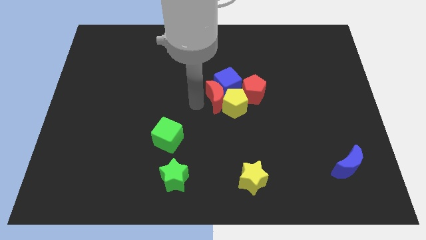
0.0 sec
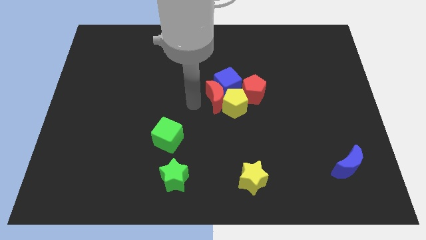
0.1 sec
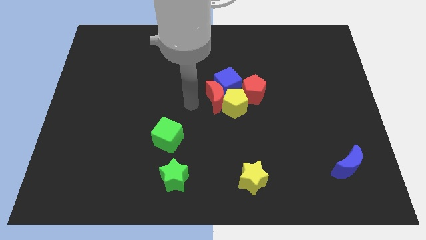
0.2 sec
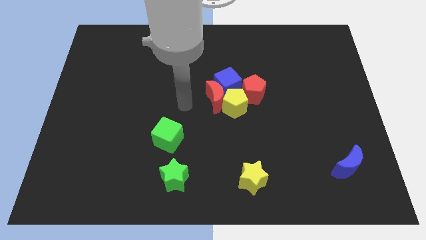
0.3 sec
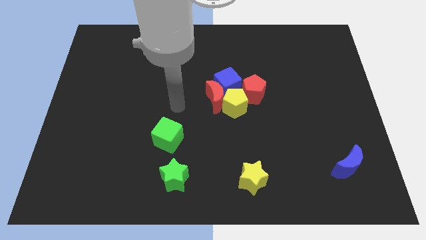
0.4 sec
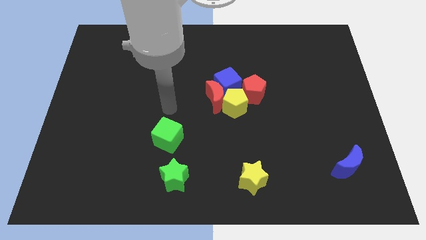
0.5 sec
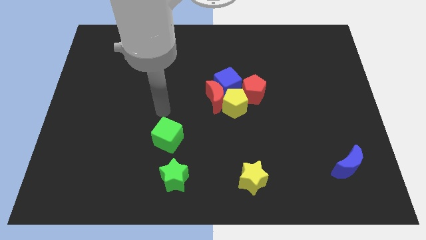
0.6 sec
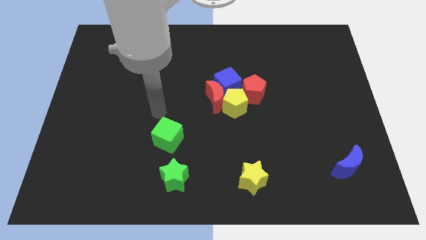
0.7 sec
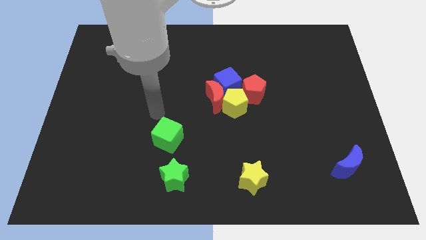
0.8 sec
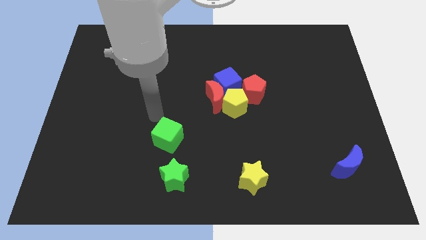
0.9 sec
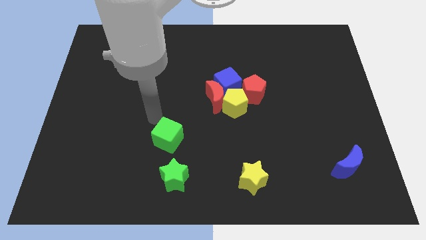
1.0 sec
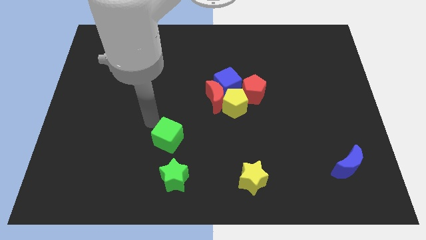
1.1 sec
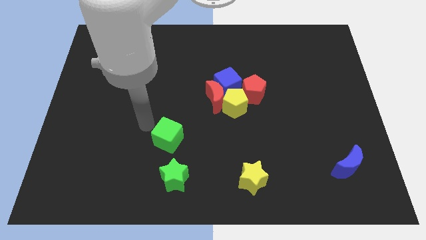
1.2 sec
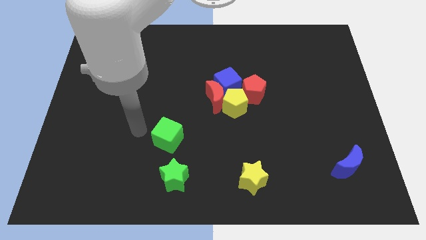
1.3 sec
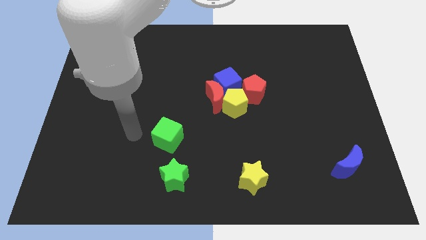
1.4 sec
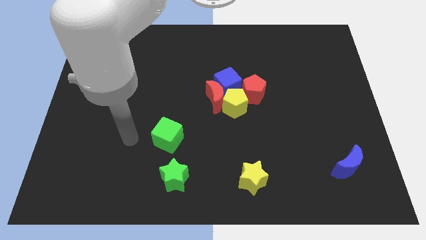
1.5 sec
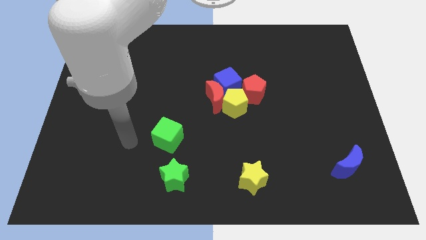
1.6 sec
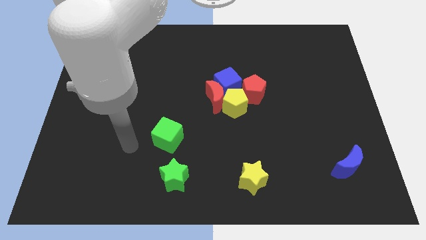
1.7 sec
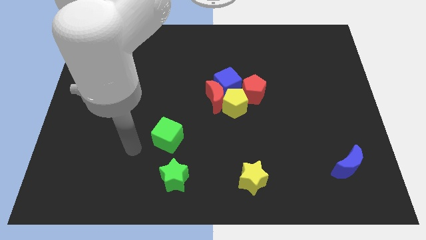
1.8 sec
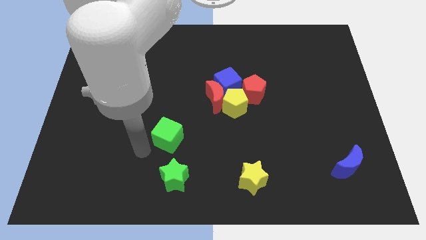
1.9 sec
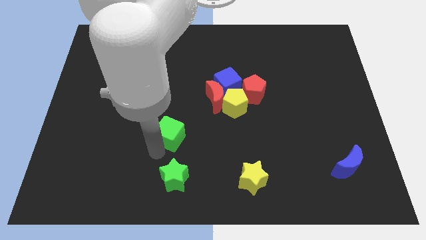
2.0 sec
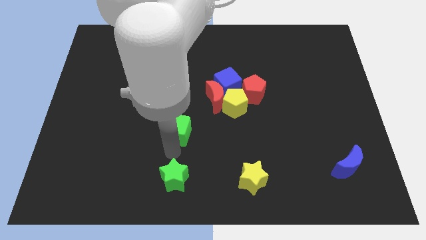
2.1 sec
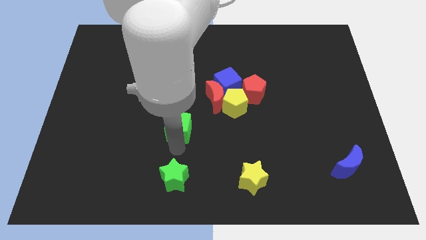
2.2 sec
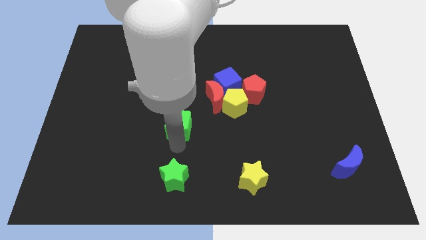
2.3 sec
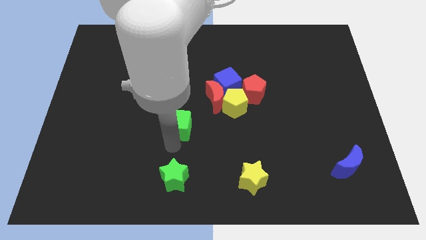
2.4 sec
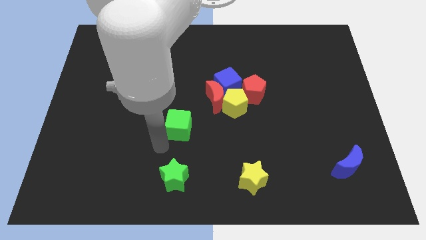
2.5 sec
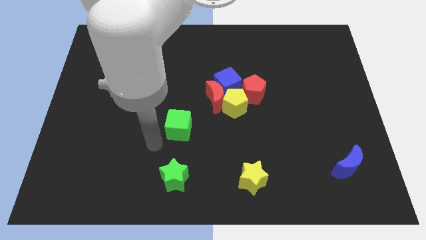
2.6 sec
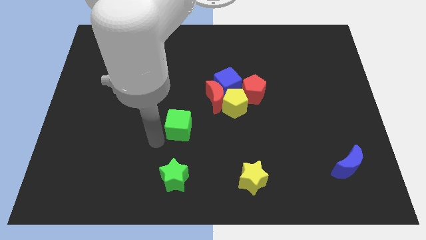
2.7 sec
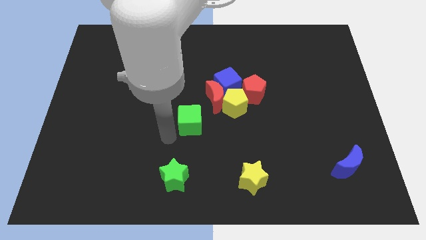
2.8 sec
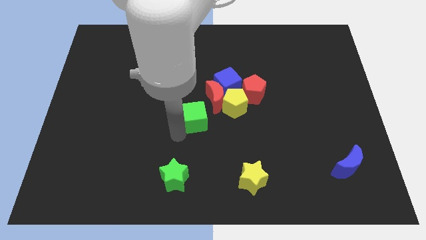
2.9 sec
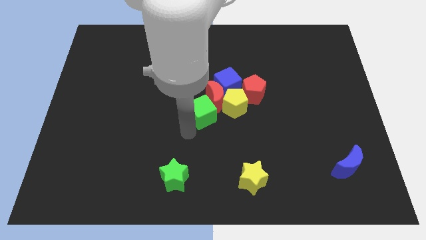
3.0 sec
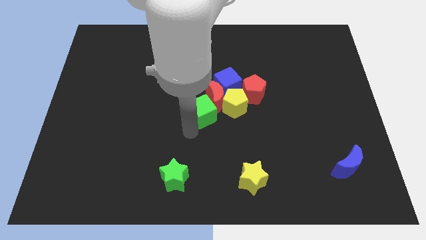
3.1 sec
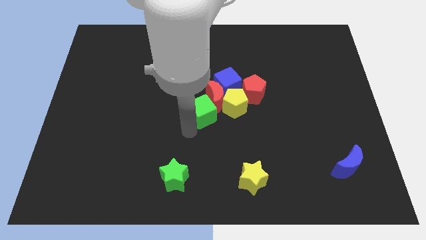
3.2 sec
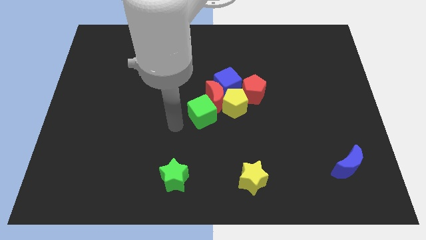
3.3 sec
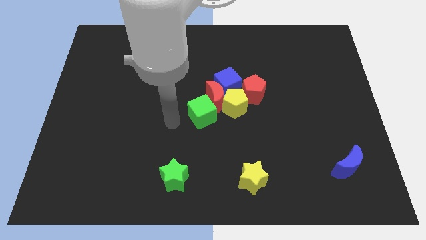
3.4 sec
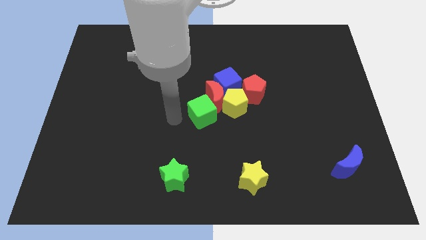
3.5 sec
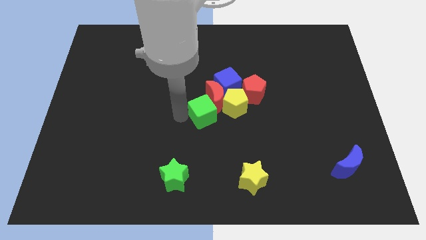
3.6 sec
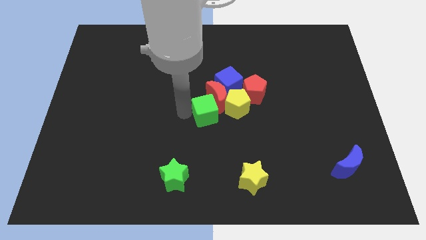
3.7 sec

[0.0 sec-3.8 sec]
push the green cube towards the center

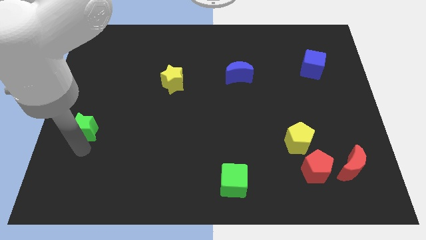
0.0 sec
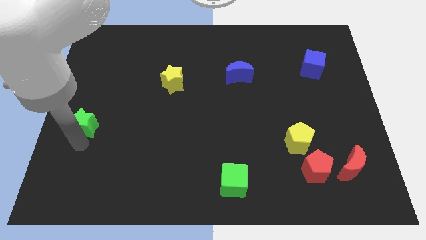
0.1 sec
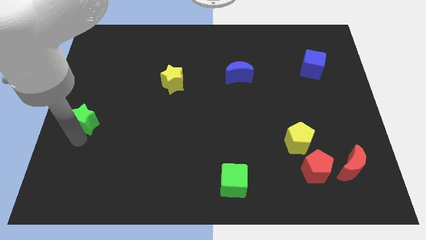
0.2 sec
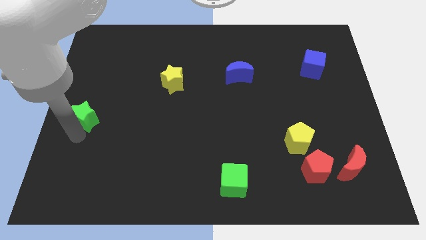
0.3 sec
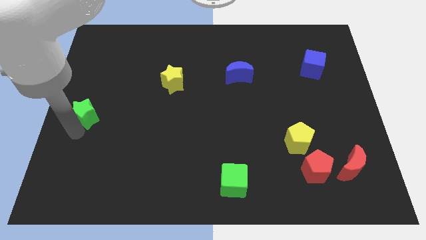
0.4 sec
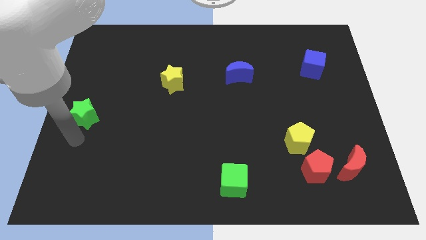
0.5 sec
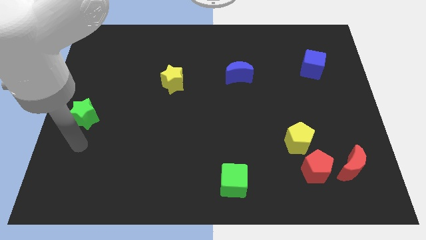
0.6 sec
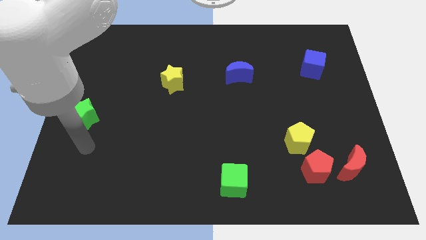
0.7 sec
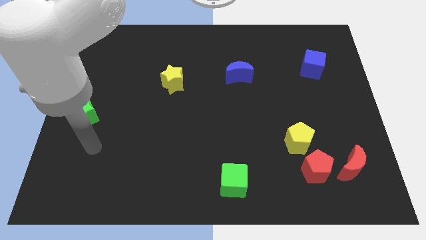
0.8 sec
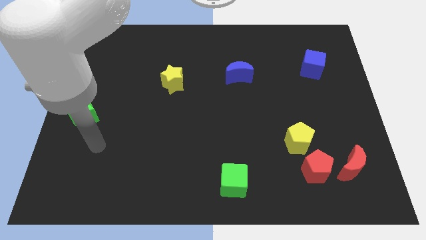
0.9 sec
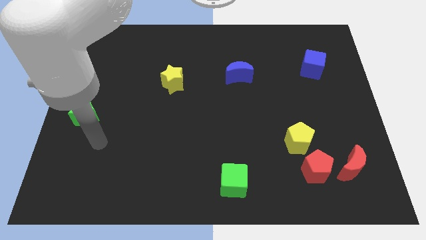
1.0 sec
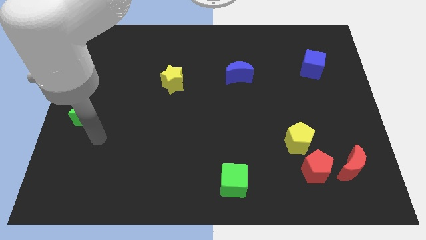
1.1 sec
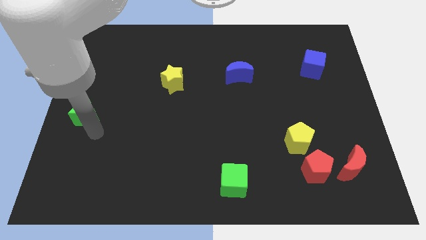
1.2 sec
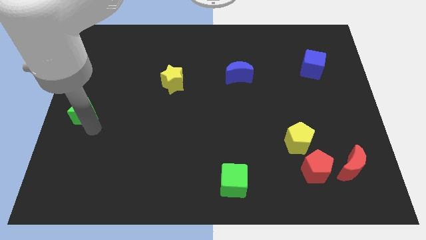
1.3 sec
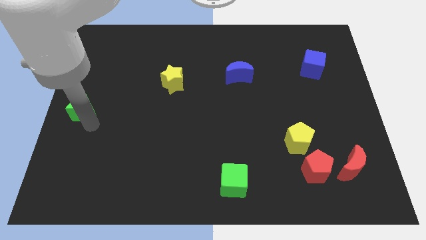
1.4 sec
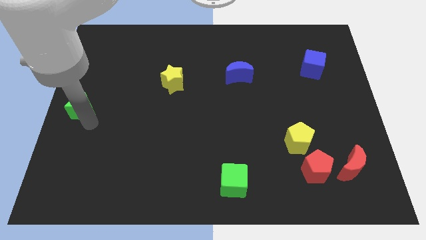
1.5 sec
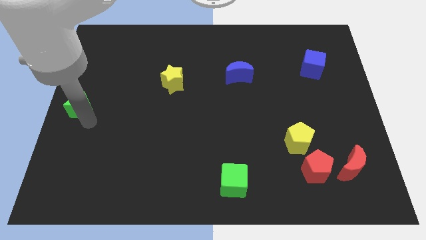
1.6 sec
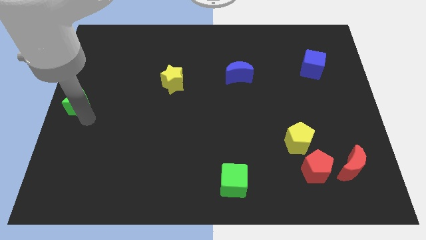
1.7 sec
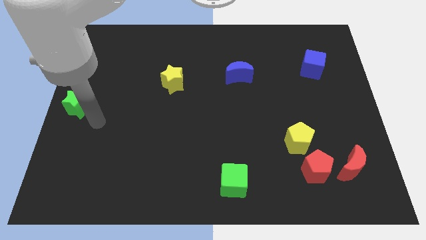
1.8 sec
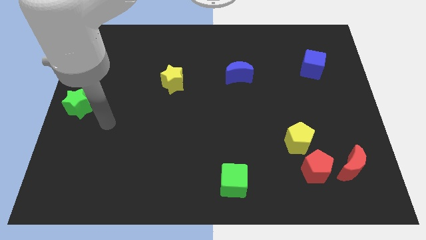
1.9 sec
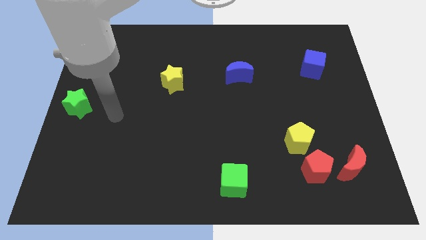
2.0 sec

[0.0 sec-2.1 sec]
push green star to the left center of the board

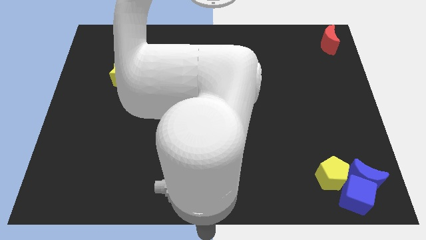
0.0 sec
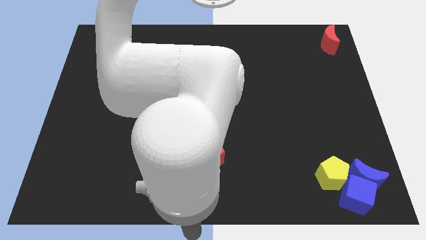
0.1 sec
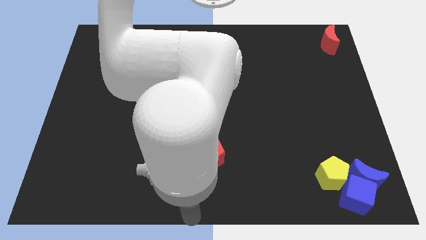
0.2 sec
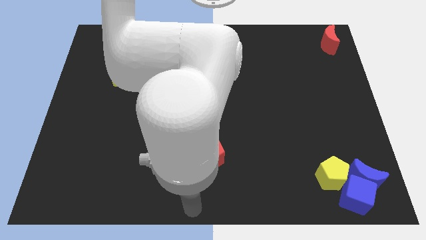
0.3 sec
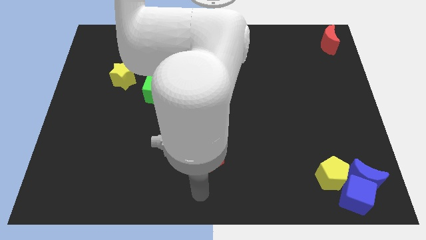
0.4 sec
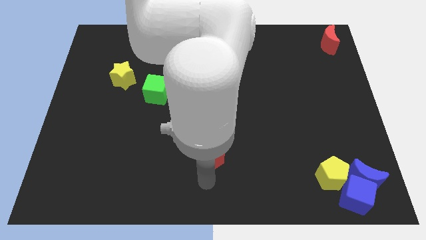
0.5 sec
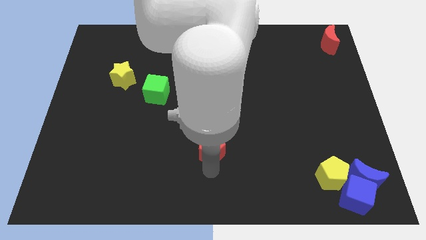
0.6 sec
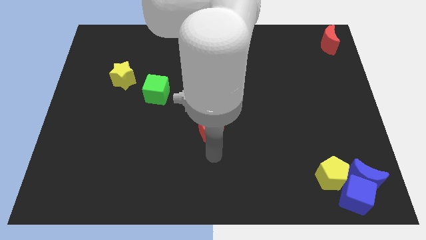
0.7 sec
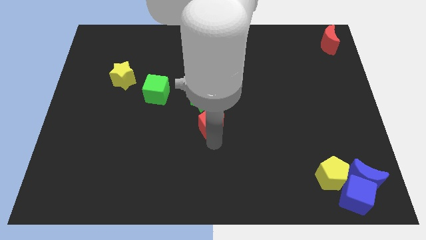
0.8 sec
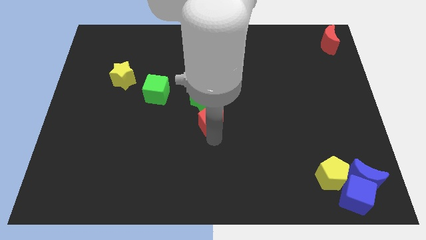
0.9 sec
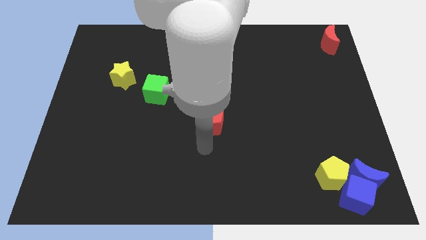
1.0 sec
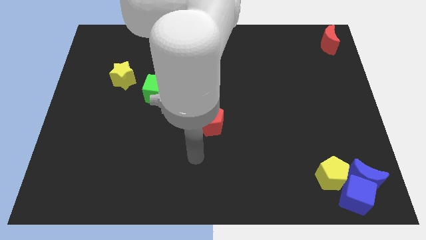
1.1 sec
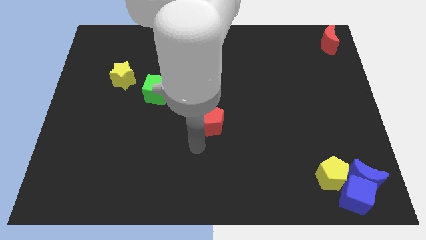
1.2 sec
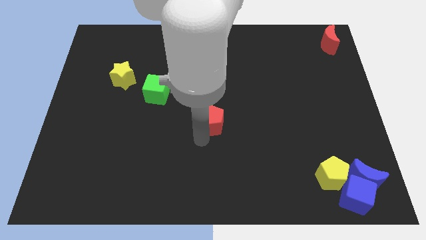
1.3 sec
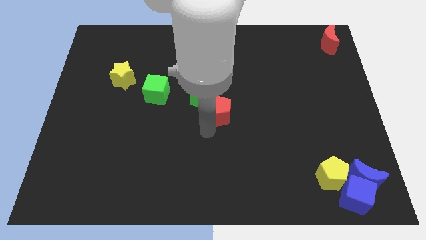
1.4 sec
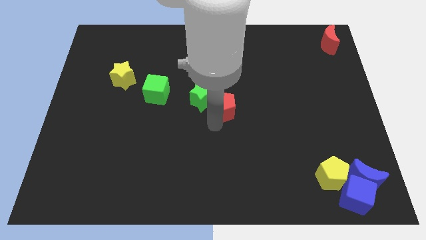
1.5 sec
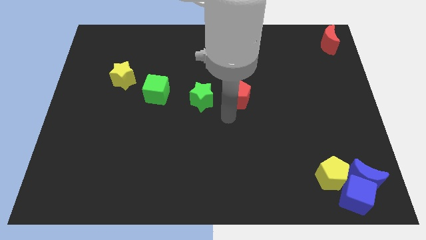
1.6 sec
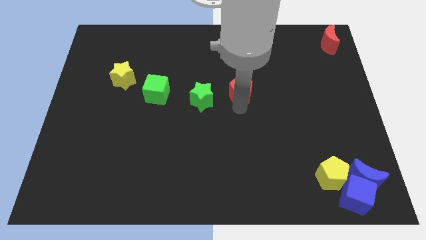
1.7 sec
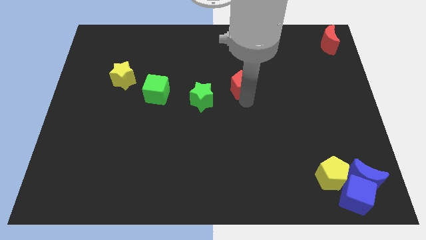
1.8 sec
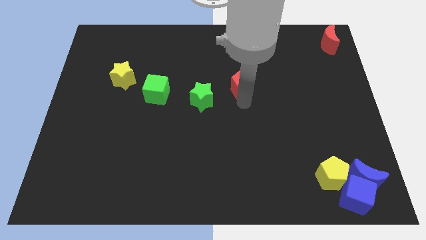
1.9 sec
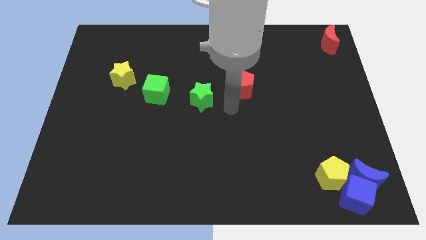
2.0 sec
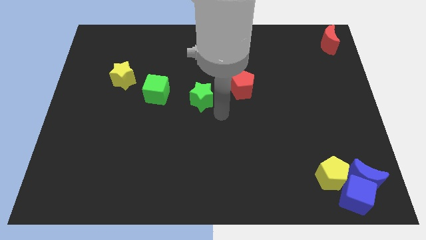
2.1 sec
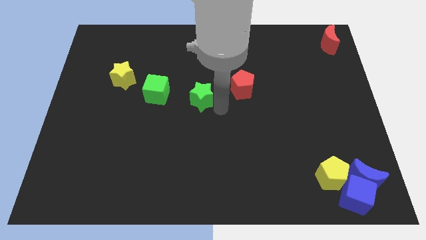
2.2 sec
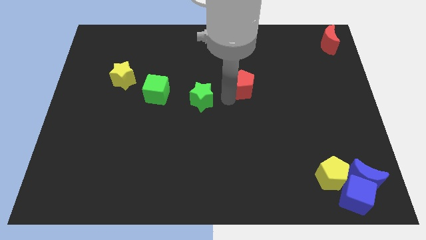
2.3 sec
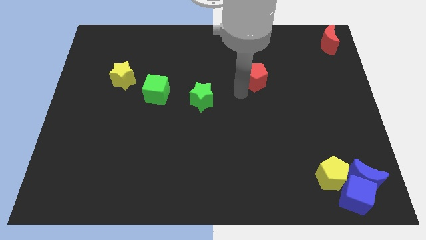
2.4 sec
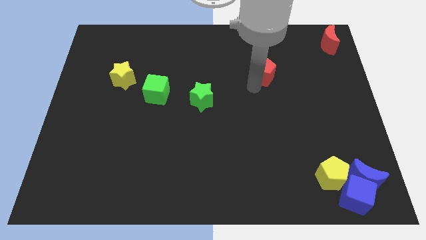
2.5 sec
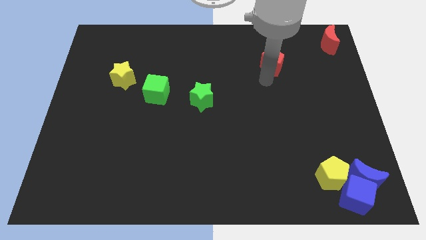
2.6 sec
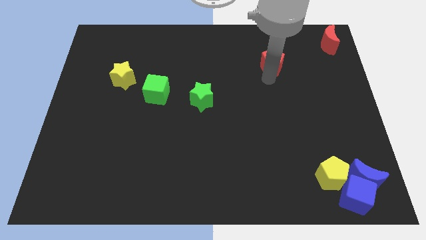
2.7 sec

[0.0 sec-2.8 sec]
push red pentagon diagonally in between red moon and green star
